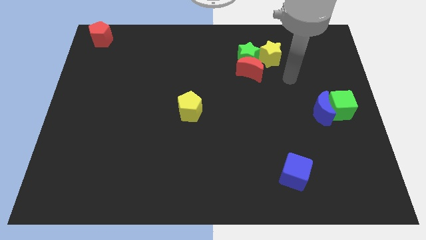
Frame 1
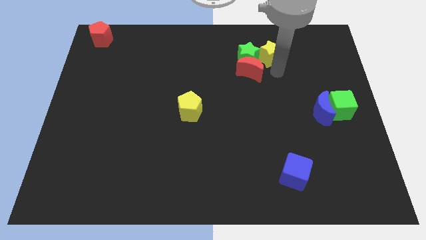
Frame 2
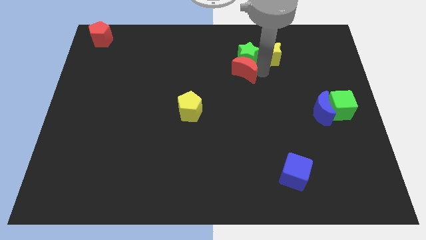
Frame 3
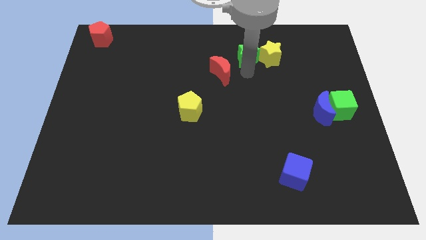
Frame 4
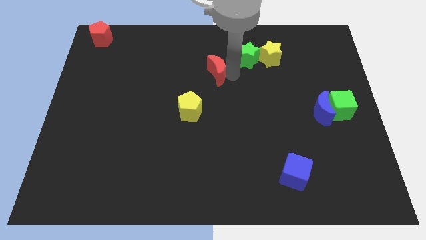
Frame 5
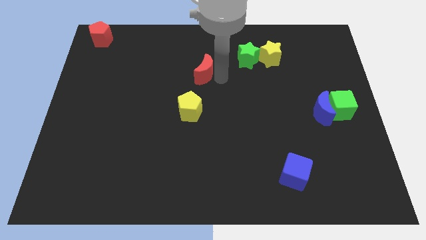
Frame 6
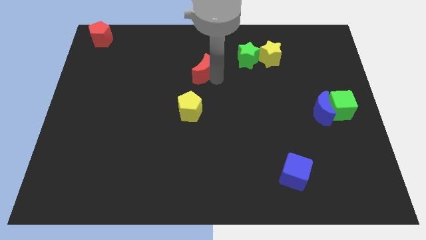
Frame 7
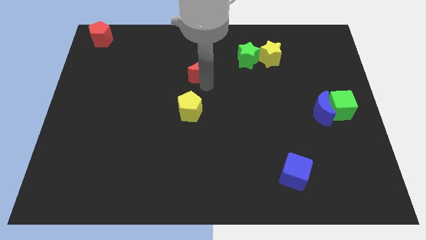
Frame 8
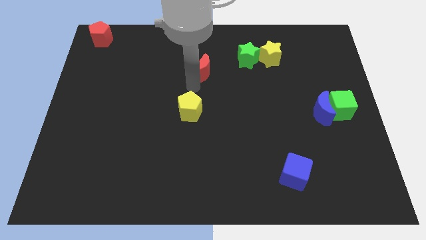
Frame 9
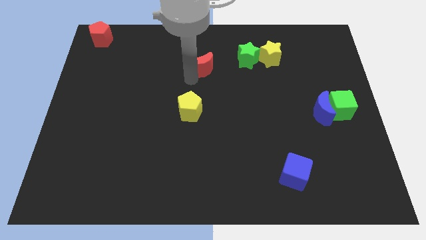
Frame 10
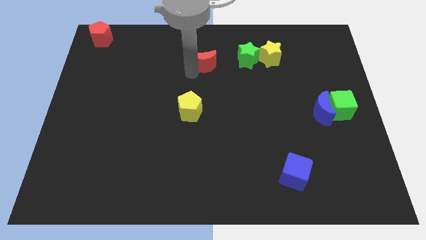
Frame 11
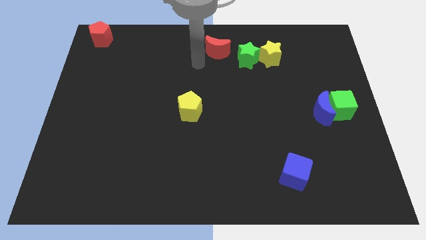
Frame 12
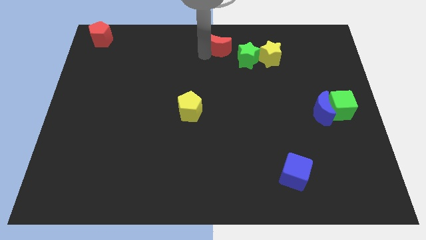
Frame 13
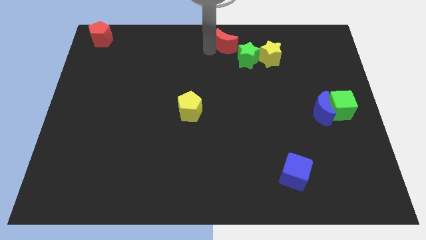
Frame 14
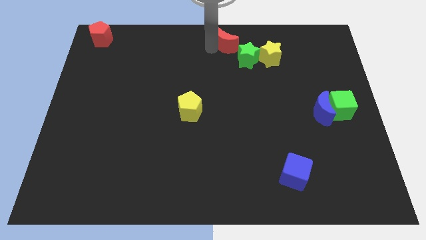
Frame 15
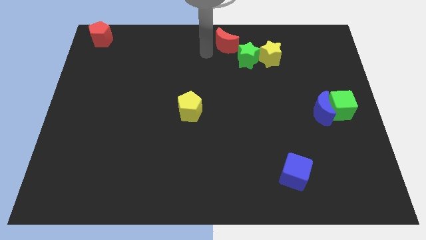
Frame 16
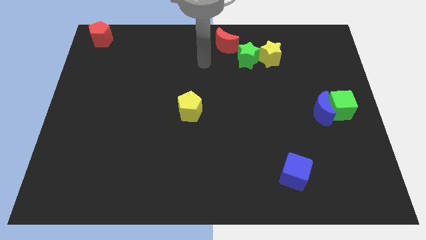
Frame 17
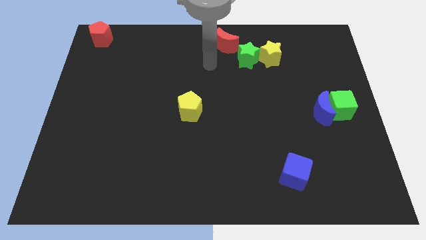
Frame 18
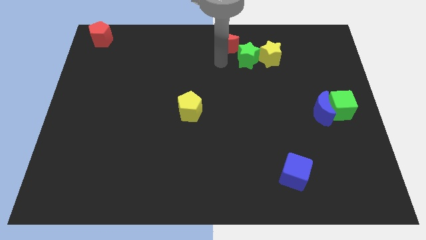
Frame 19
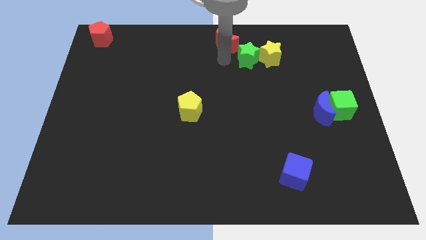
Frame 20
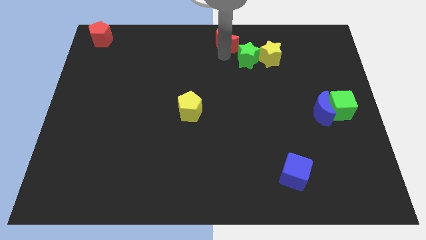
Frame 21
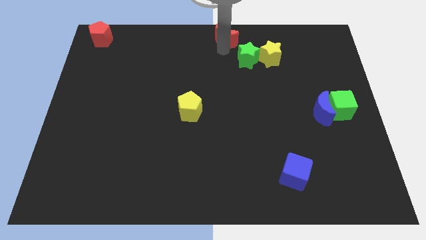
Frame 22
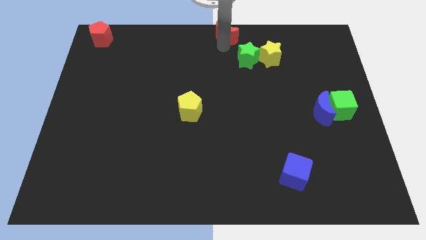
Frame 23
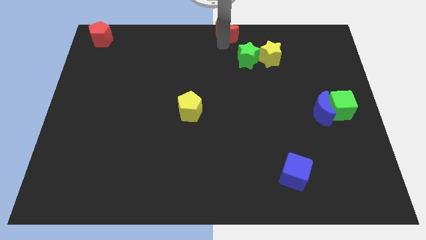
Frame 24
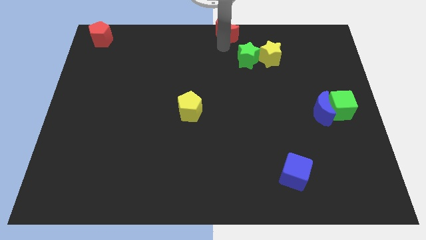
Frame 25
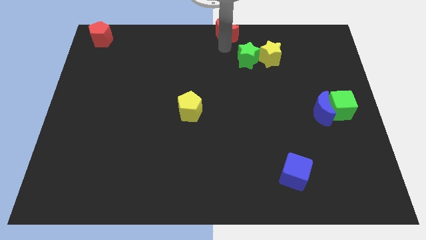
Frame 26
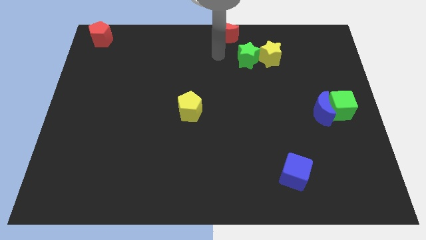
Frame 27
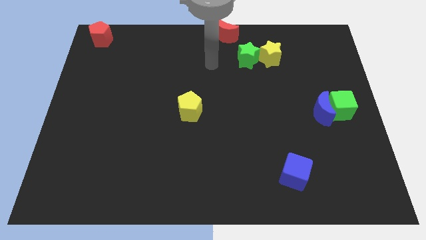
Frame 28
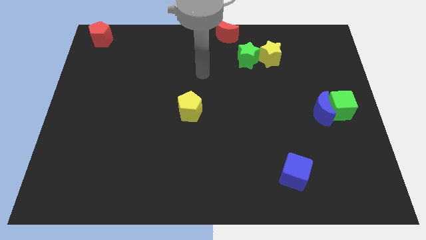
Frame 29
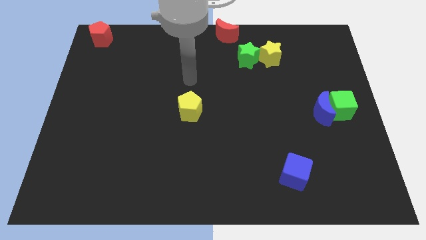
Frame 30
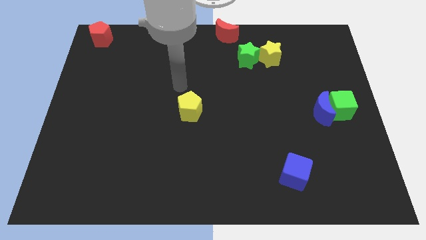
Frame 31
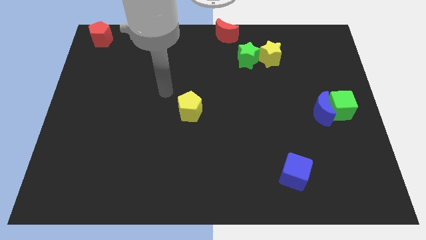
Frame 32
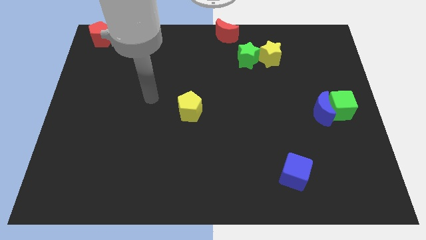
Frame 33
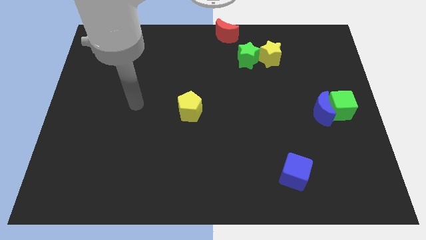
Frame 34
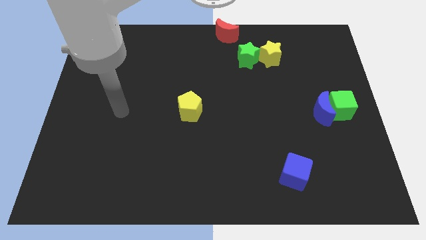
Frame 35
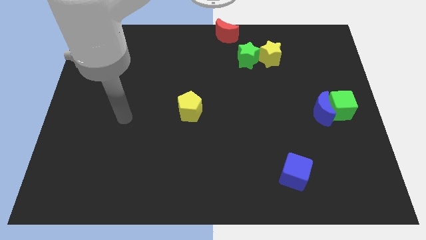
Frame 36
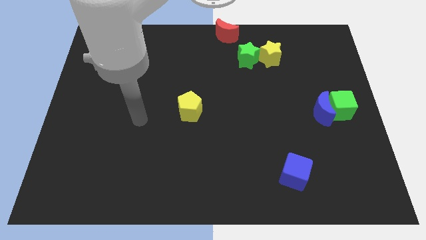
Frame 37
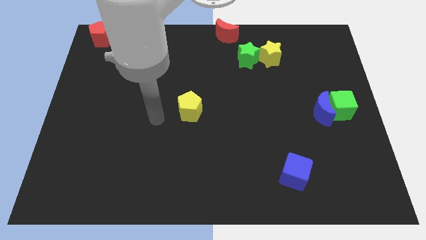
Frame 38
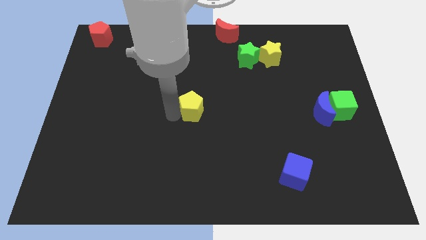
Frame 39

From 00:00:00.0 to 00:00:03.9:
push the red crescent to the center top of the board

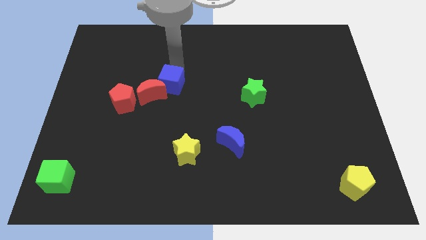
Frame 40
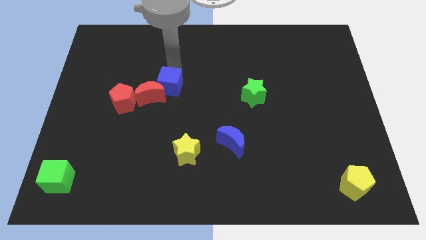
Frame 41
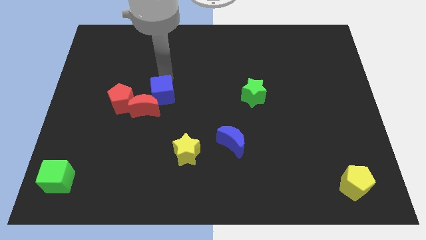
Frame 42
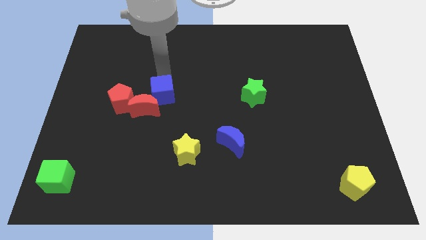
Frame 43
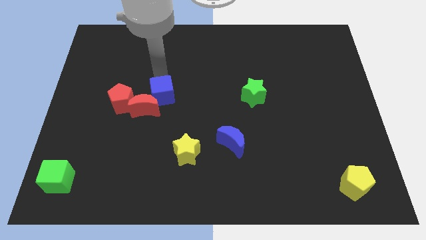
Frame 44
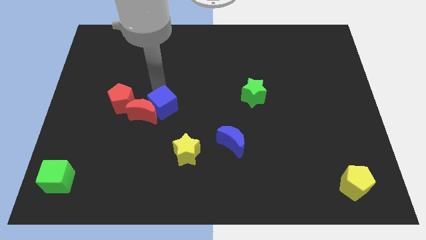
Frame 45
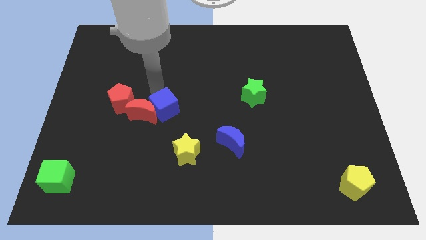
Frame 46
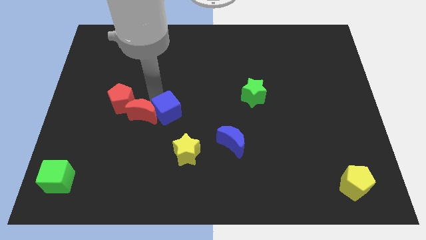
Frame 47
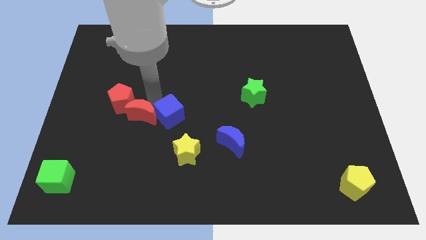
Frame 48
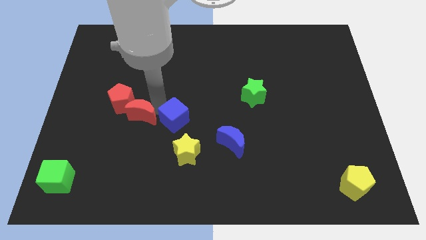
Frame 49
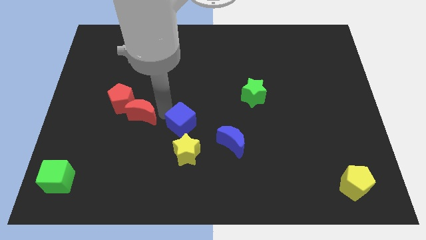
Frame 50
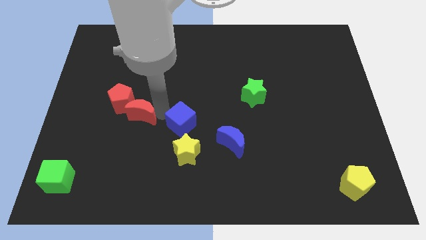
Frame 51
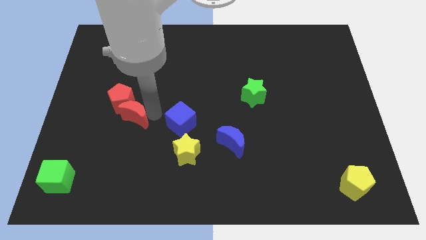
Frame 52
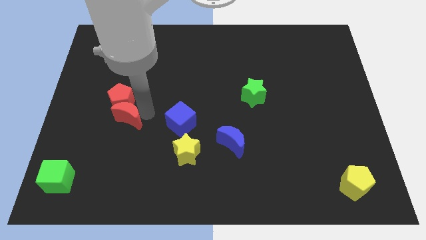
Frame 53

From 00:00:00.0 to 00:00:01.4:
place blue cube to the top of yellow star

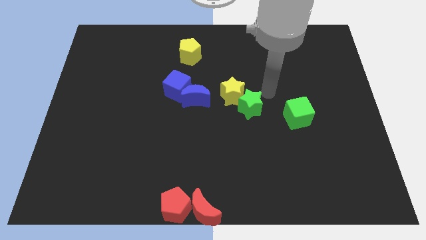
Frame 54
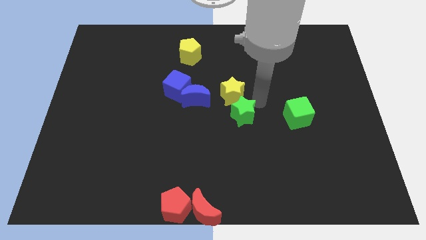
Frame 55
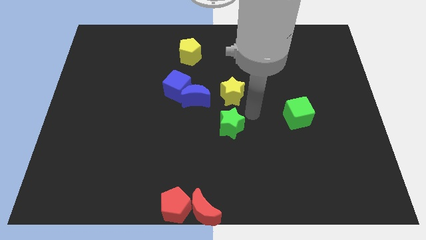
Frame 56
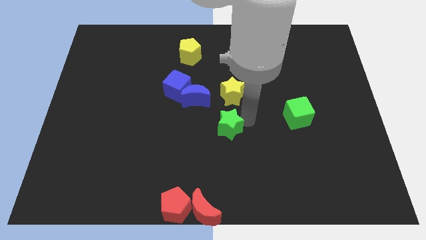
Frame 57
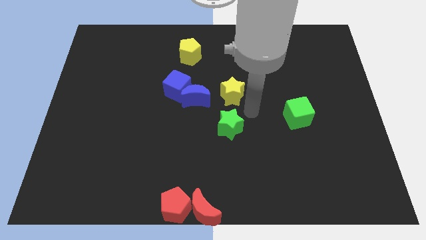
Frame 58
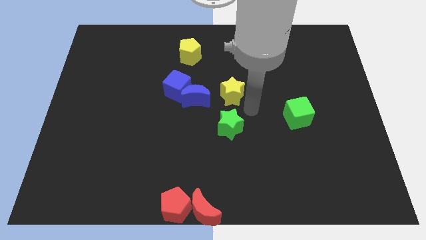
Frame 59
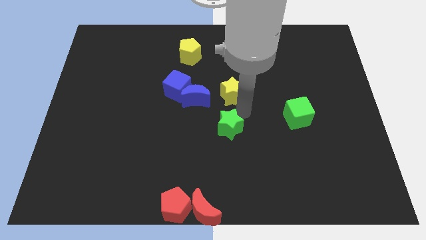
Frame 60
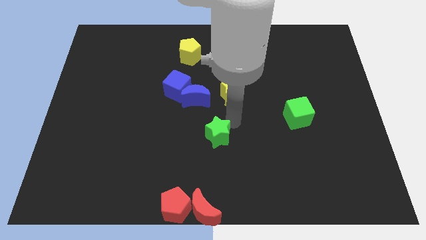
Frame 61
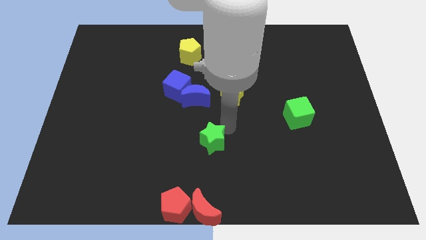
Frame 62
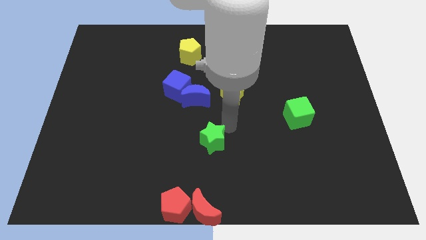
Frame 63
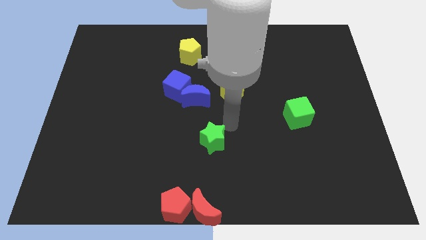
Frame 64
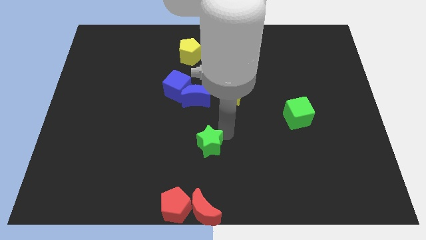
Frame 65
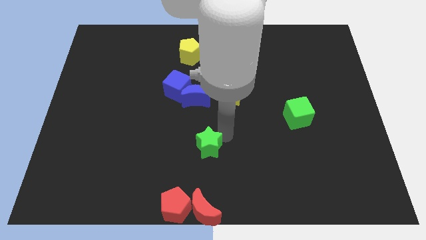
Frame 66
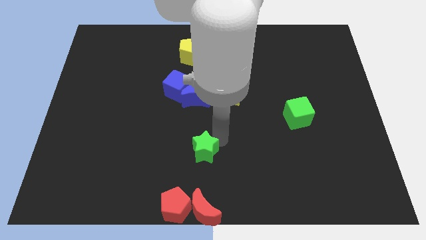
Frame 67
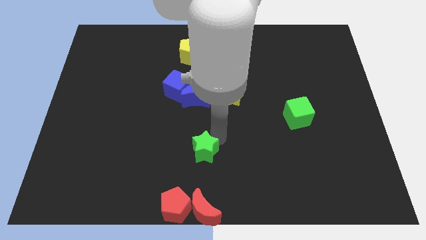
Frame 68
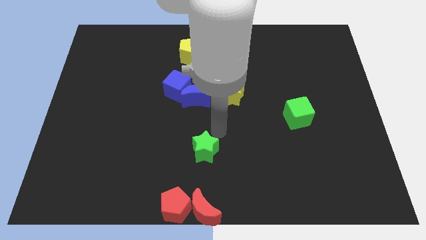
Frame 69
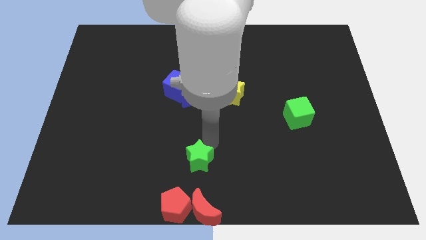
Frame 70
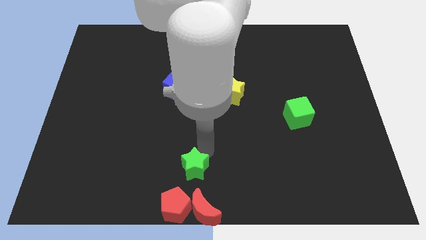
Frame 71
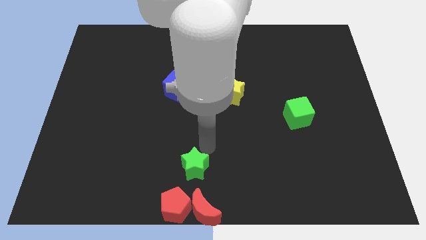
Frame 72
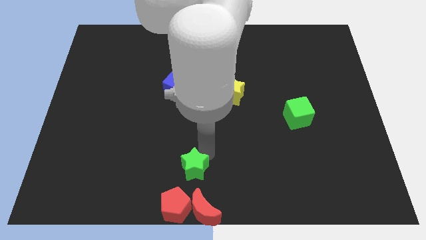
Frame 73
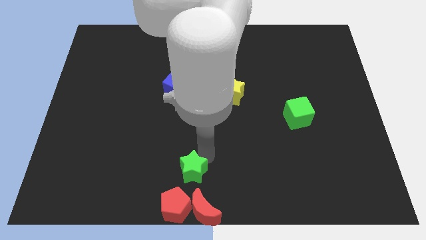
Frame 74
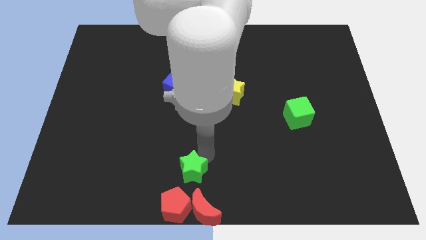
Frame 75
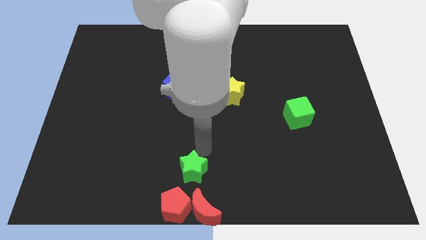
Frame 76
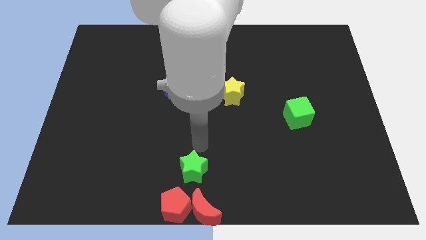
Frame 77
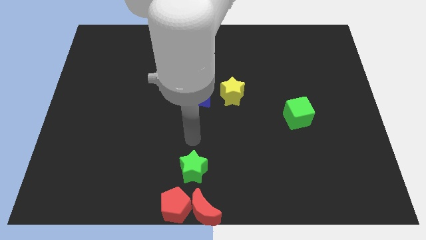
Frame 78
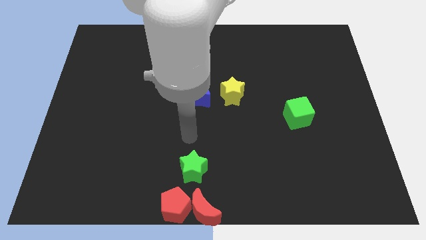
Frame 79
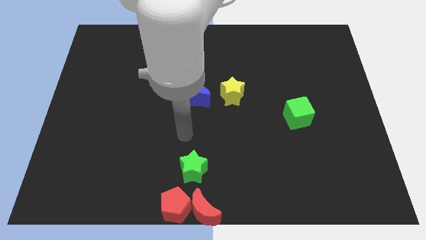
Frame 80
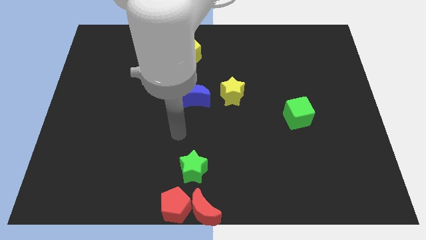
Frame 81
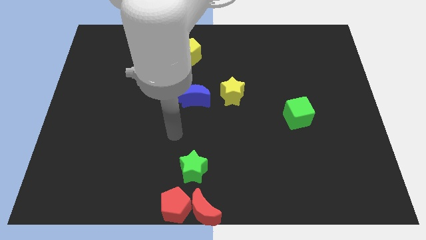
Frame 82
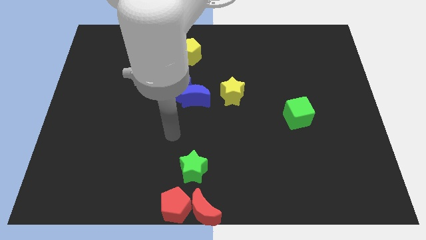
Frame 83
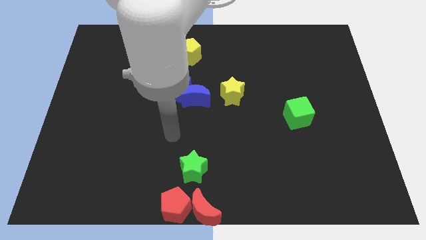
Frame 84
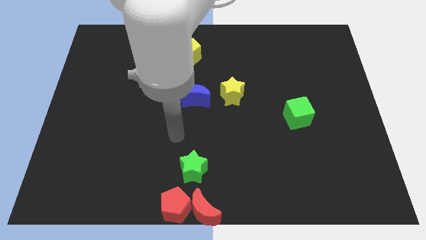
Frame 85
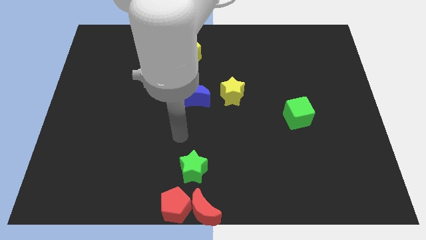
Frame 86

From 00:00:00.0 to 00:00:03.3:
move the green star on top of red pentagon and red moon

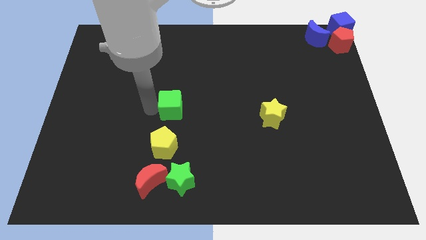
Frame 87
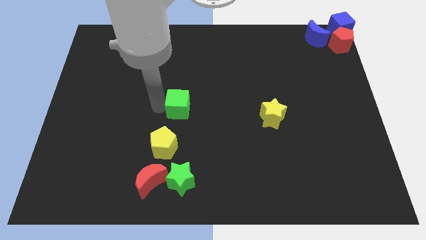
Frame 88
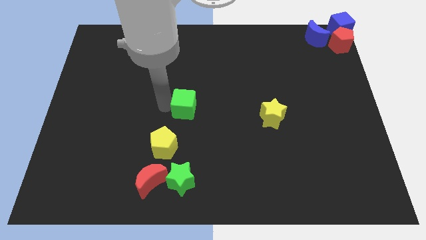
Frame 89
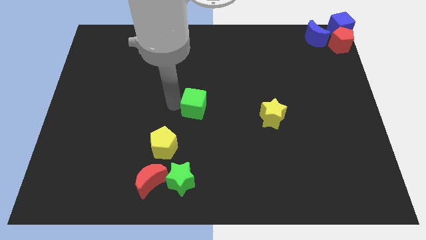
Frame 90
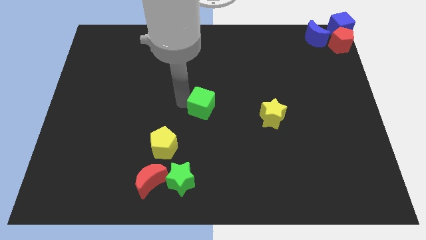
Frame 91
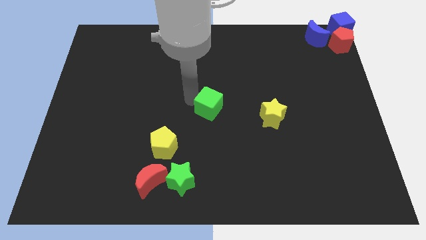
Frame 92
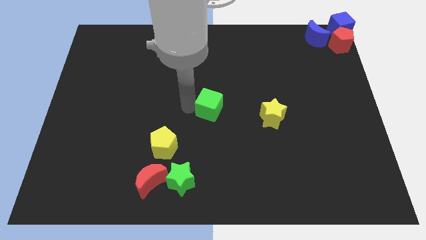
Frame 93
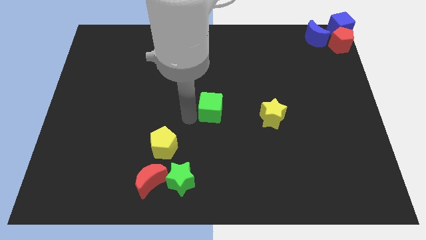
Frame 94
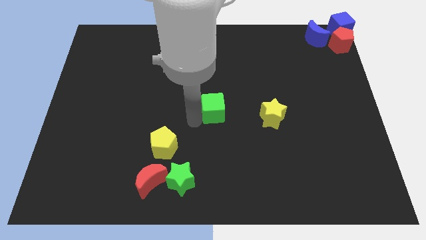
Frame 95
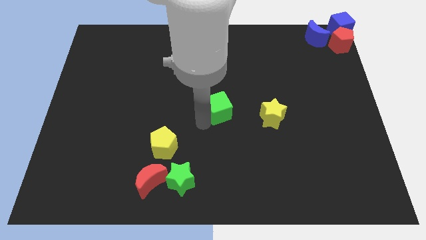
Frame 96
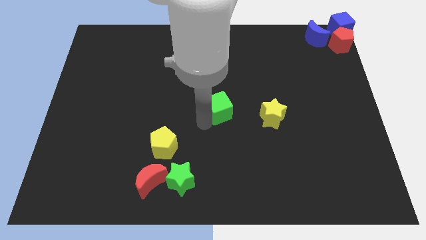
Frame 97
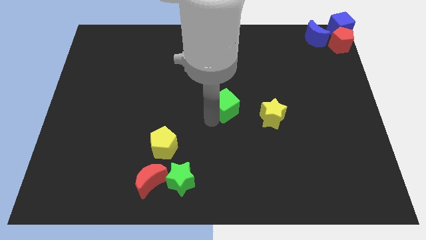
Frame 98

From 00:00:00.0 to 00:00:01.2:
place the green cube left to the yellow star
